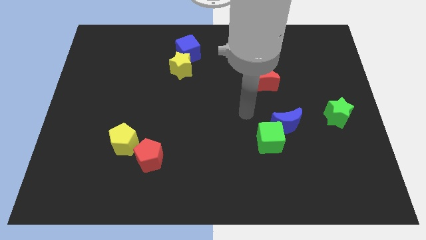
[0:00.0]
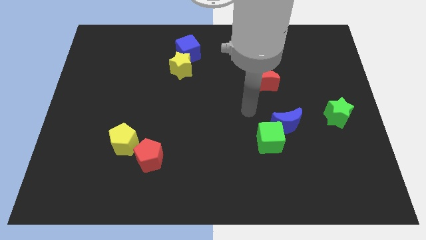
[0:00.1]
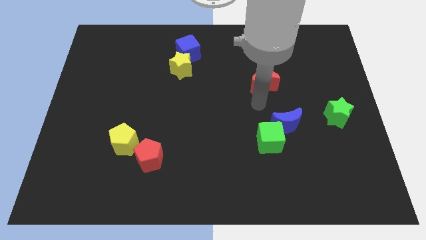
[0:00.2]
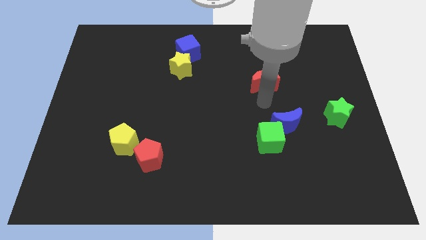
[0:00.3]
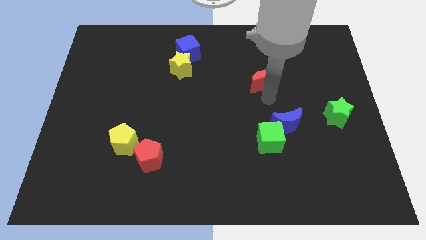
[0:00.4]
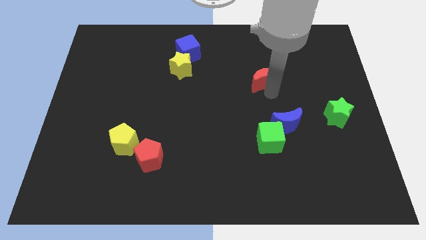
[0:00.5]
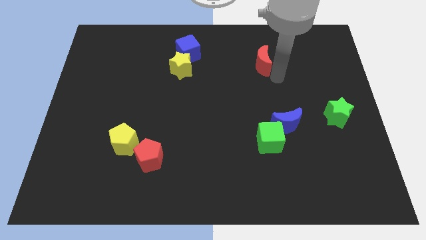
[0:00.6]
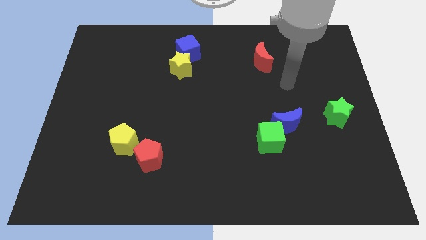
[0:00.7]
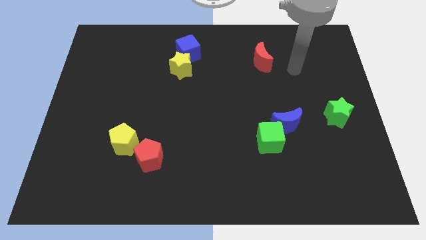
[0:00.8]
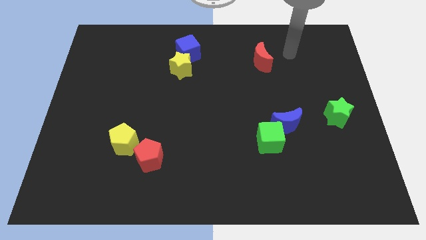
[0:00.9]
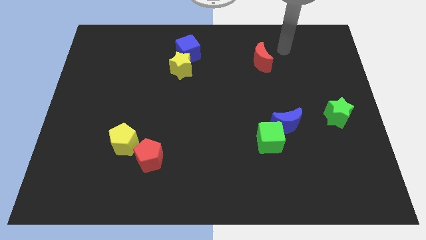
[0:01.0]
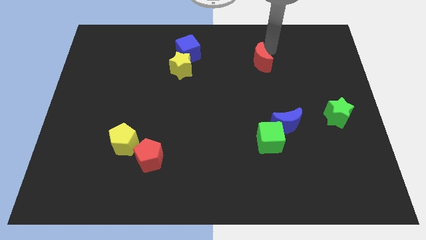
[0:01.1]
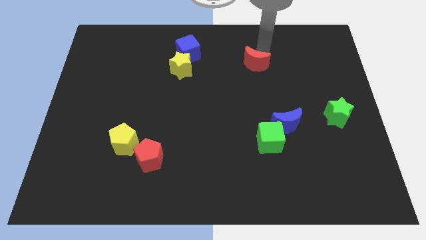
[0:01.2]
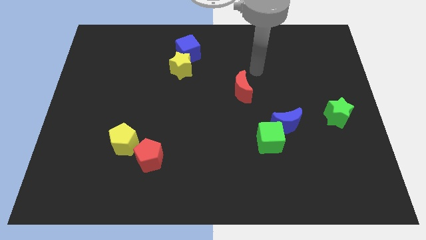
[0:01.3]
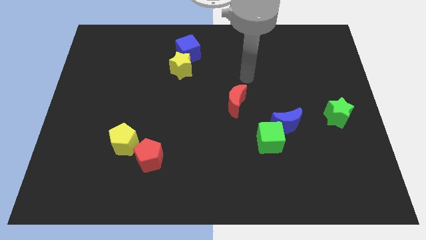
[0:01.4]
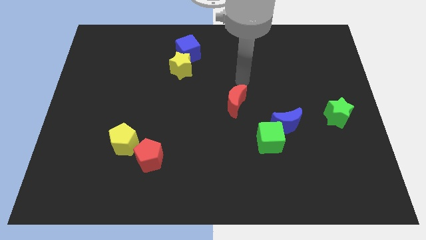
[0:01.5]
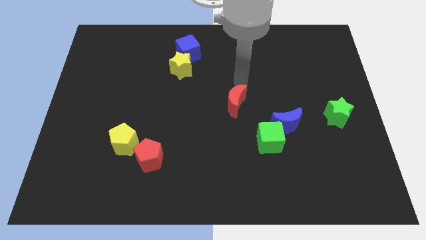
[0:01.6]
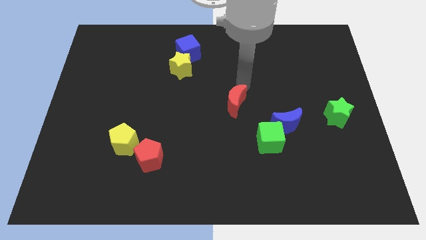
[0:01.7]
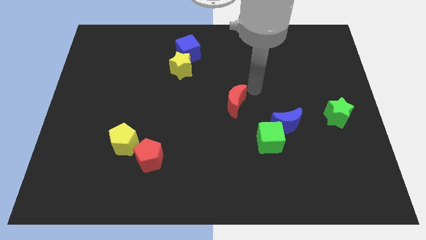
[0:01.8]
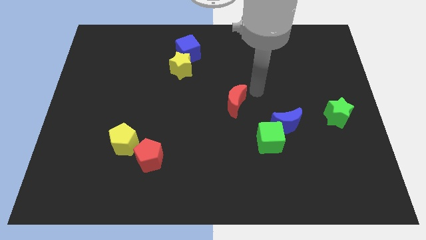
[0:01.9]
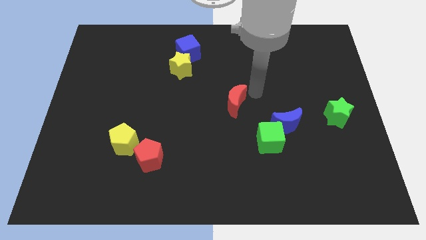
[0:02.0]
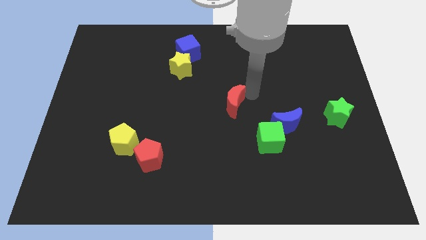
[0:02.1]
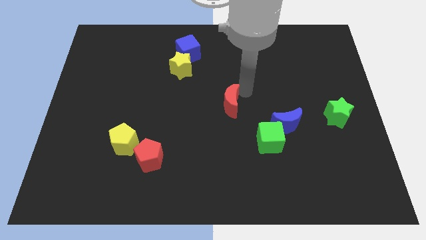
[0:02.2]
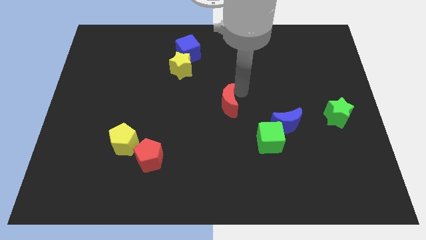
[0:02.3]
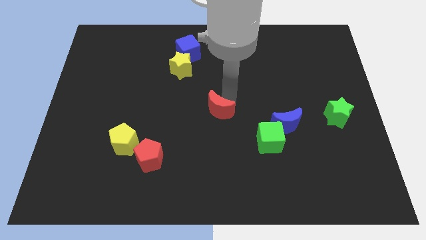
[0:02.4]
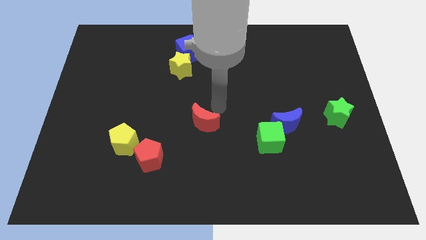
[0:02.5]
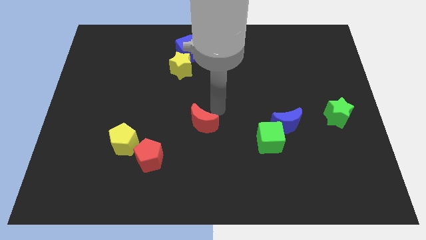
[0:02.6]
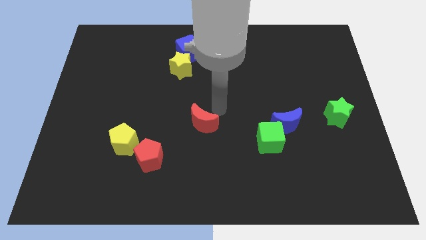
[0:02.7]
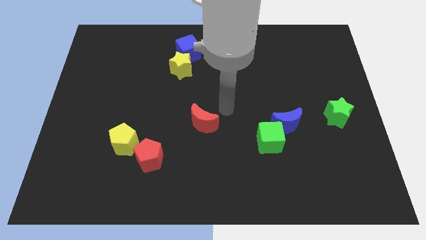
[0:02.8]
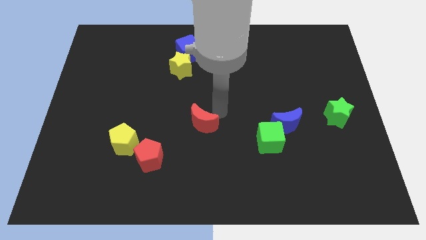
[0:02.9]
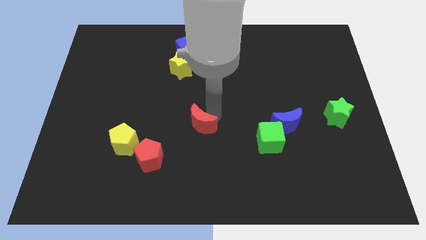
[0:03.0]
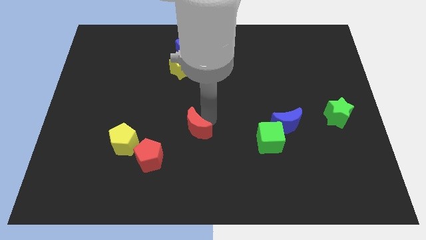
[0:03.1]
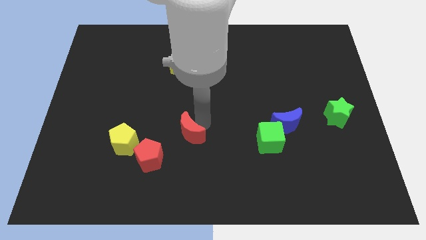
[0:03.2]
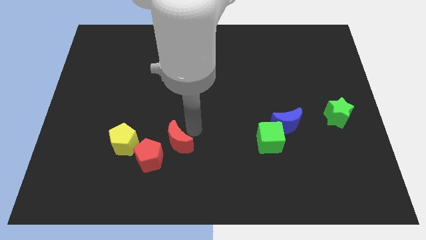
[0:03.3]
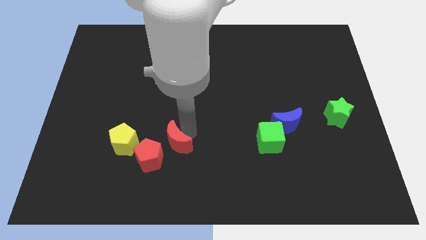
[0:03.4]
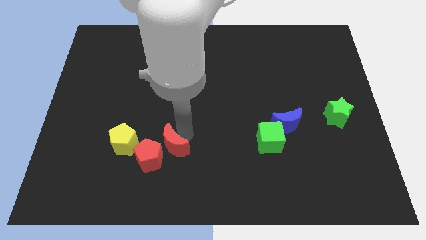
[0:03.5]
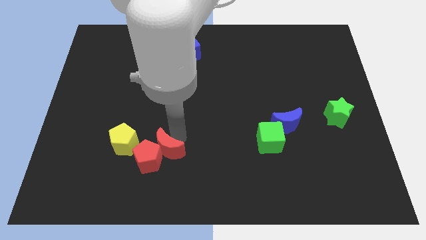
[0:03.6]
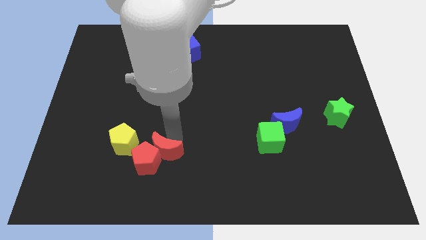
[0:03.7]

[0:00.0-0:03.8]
slide the red moon next to the red pentagon

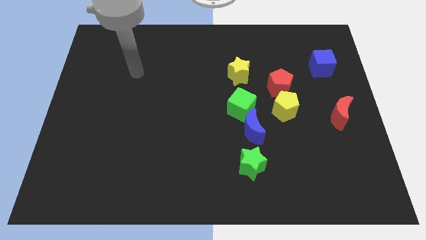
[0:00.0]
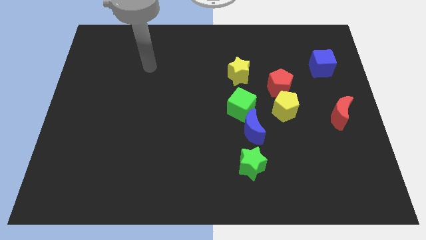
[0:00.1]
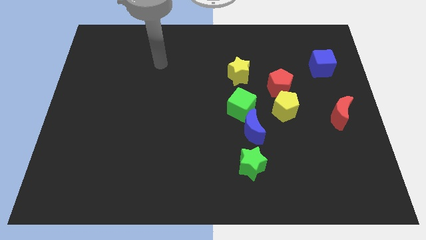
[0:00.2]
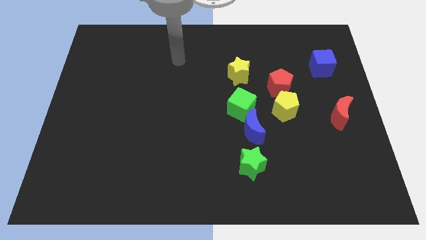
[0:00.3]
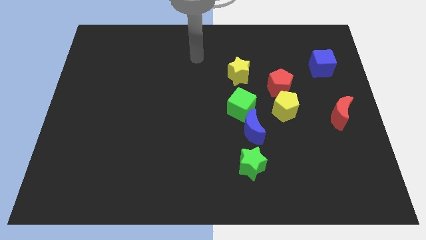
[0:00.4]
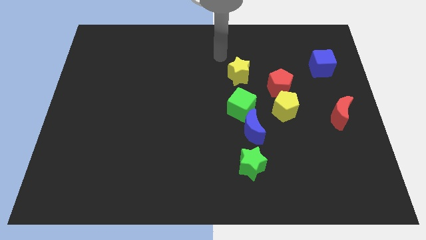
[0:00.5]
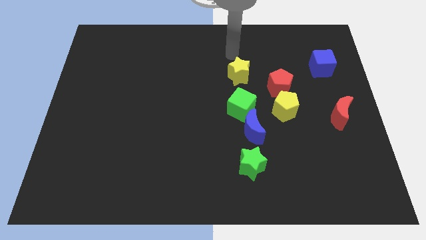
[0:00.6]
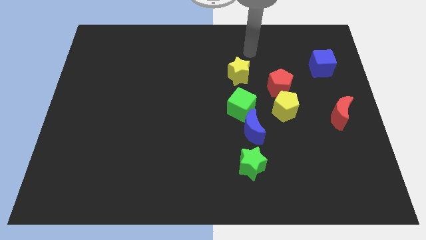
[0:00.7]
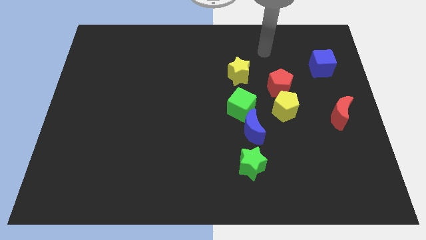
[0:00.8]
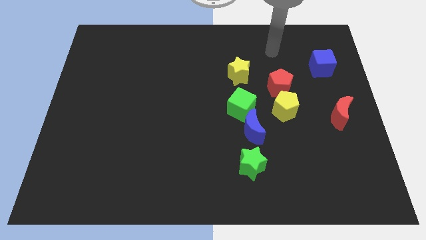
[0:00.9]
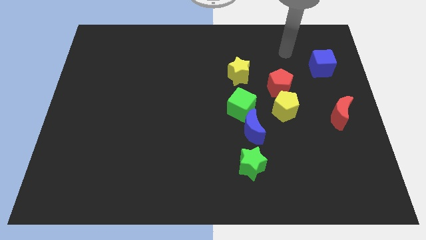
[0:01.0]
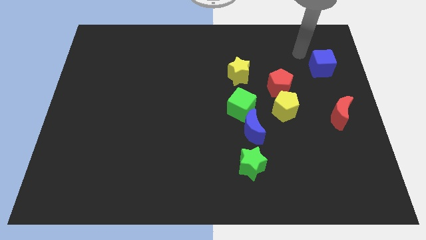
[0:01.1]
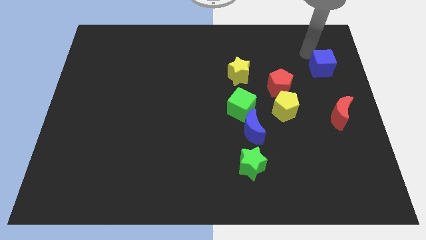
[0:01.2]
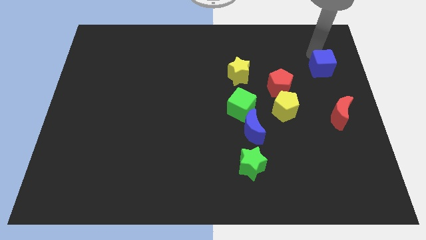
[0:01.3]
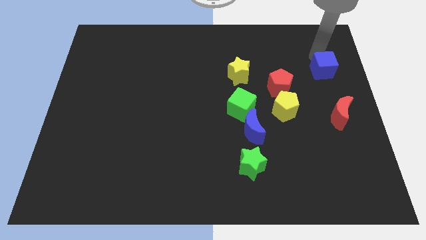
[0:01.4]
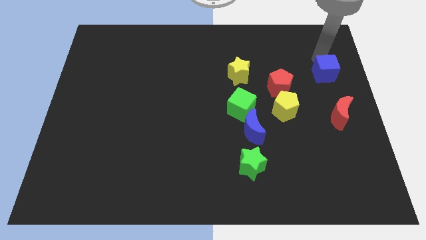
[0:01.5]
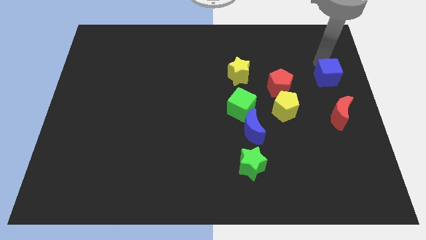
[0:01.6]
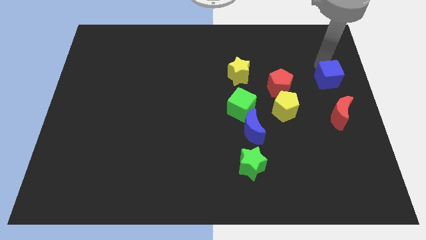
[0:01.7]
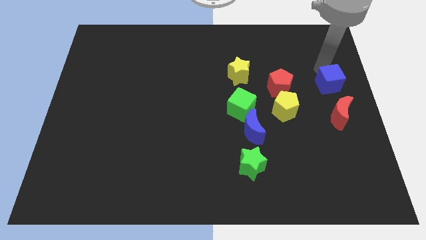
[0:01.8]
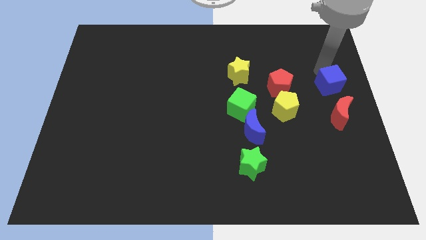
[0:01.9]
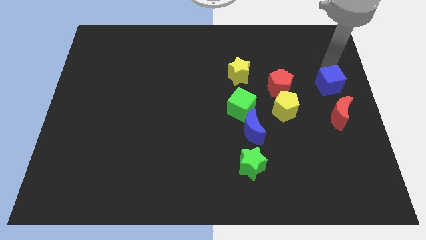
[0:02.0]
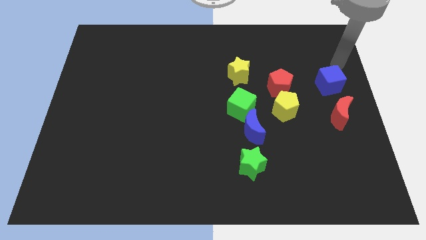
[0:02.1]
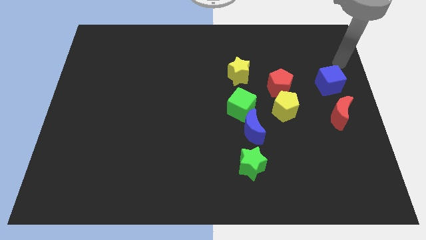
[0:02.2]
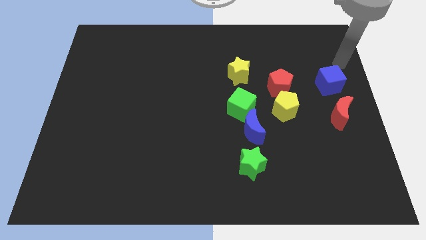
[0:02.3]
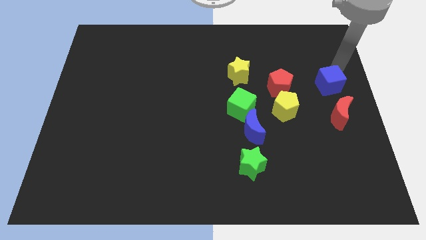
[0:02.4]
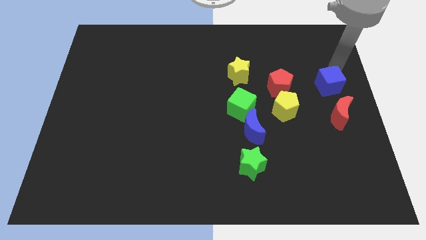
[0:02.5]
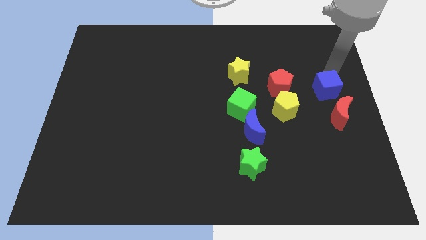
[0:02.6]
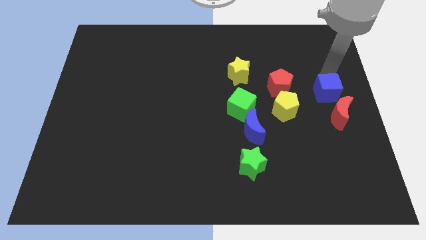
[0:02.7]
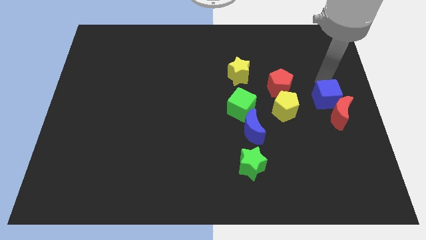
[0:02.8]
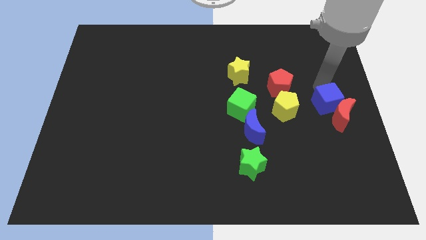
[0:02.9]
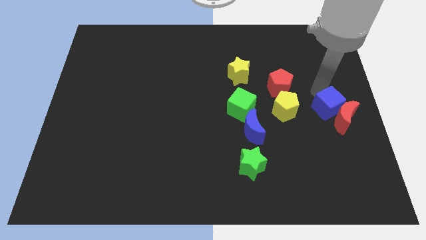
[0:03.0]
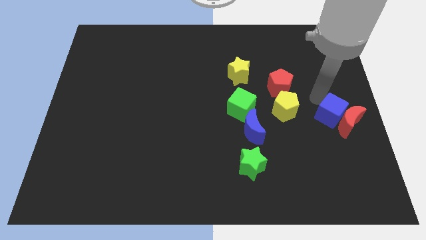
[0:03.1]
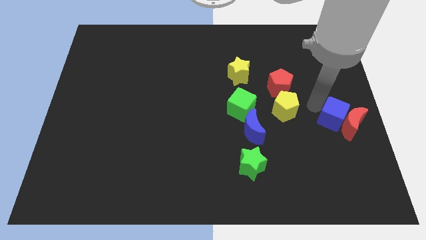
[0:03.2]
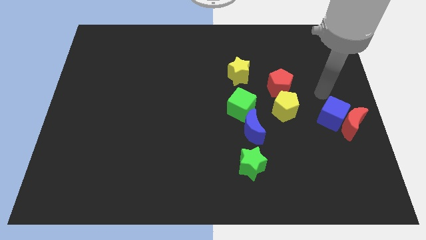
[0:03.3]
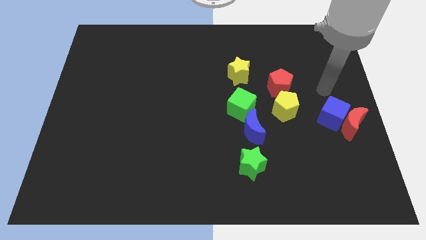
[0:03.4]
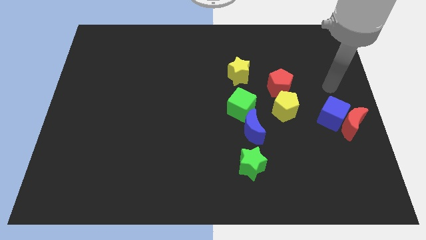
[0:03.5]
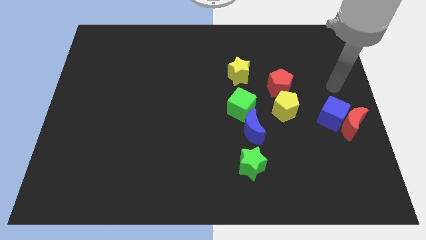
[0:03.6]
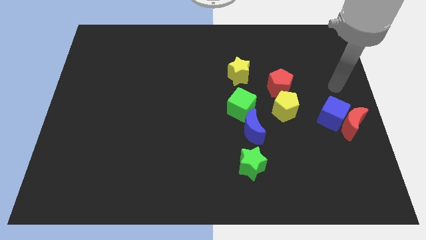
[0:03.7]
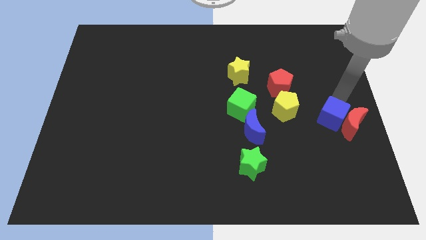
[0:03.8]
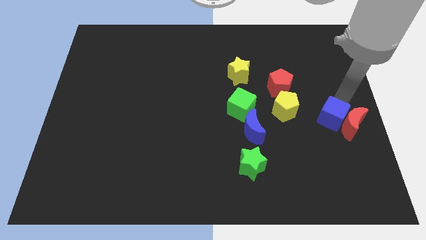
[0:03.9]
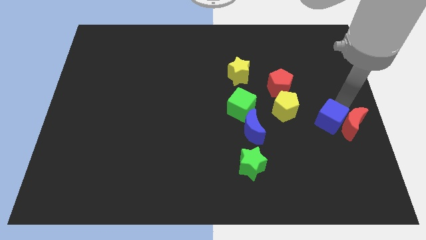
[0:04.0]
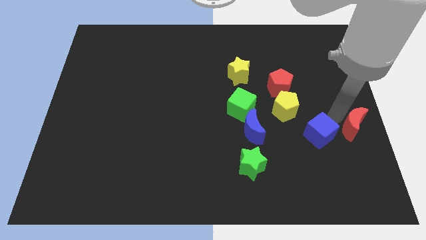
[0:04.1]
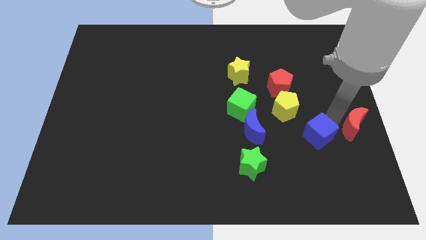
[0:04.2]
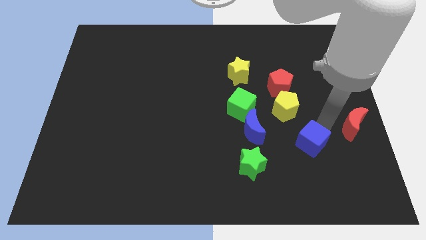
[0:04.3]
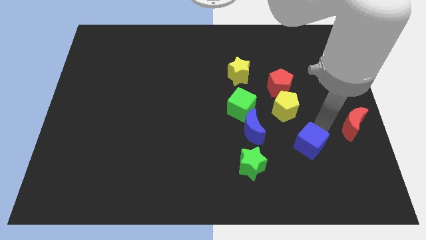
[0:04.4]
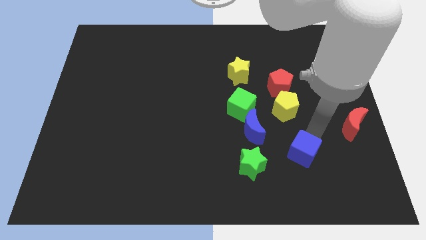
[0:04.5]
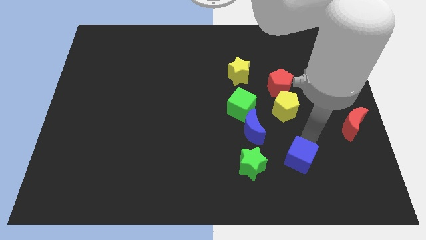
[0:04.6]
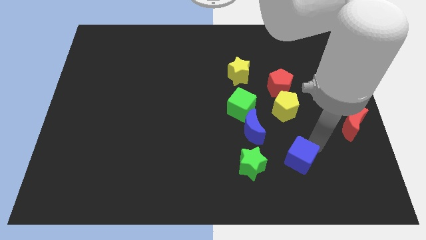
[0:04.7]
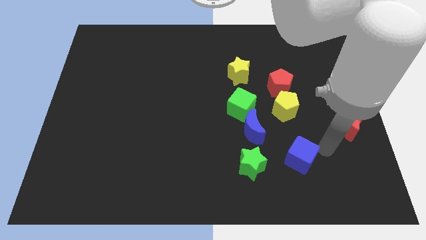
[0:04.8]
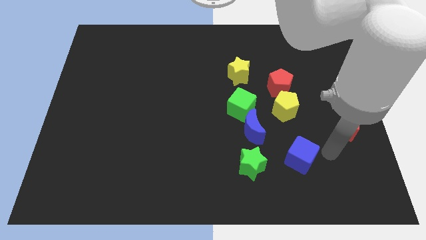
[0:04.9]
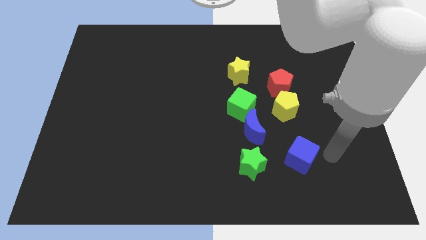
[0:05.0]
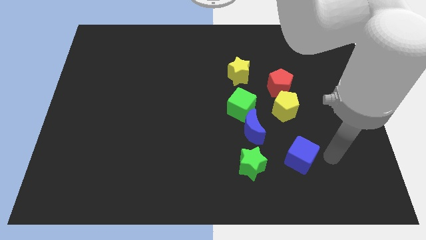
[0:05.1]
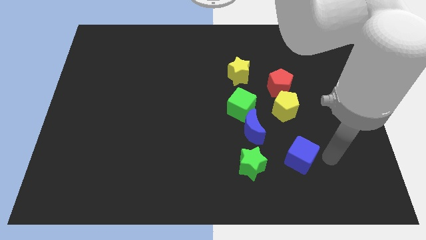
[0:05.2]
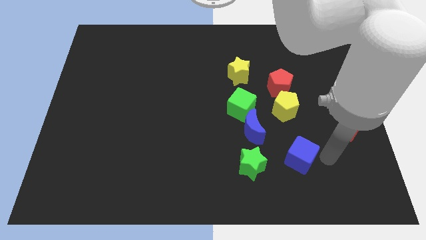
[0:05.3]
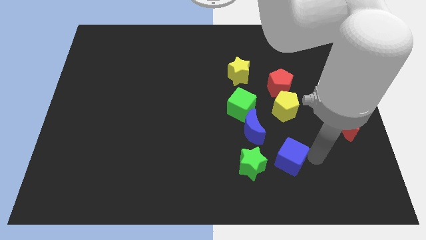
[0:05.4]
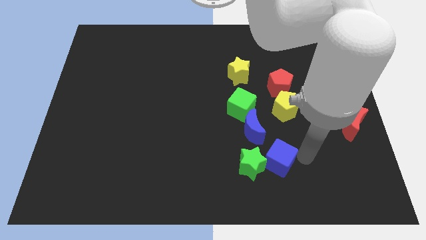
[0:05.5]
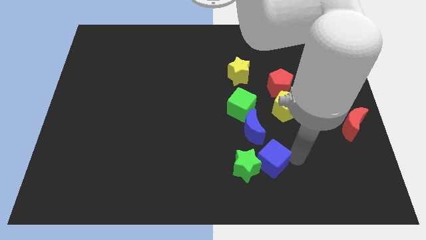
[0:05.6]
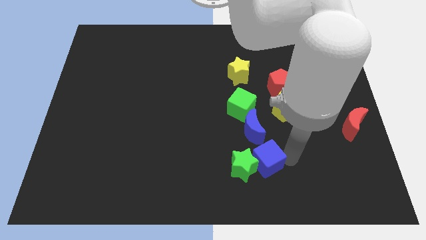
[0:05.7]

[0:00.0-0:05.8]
move the blue cube next to the green star
